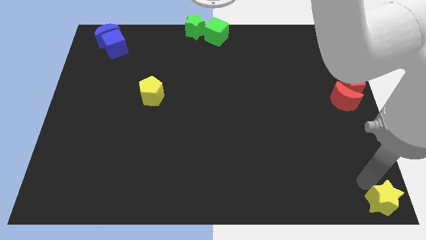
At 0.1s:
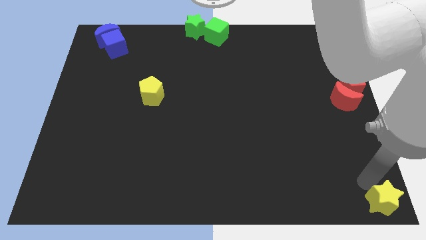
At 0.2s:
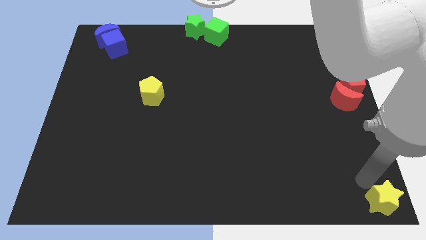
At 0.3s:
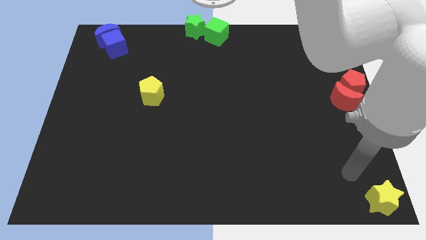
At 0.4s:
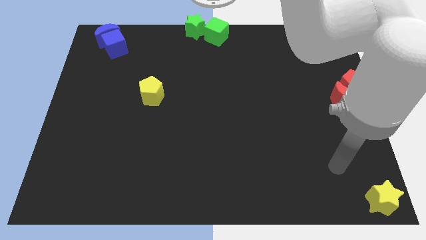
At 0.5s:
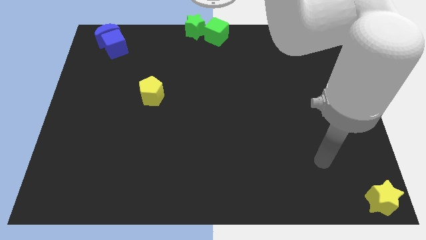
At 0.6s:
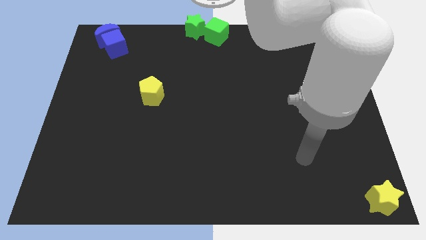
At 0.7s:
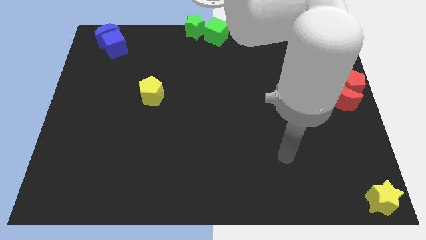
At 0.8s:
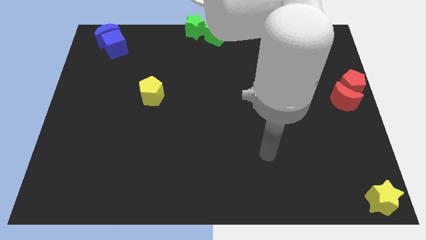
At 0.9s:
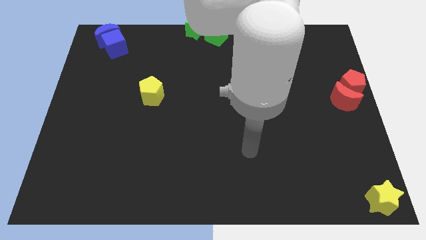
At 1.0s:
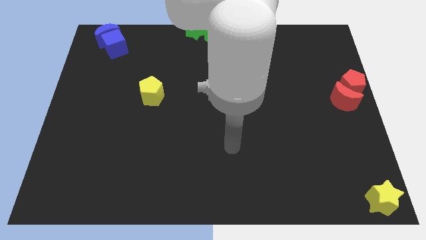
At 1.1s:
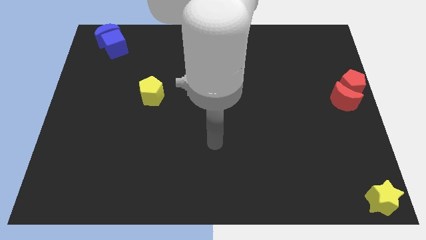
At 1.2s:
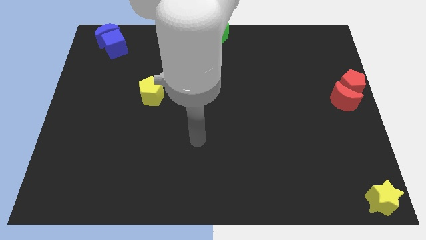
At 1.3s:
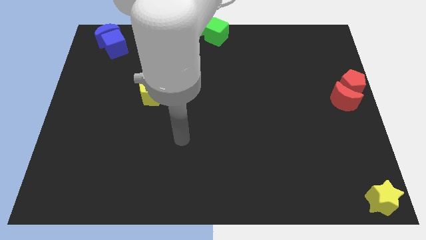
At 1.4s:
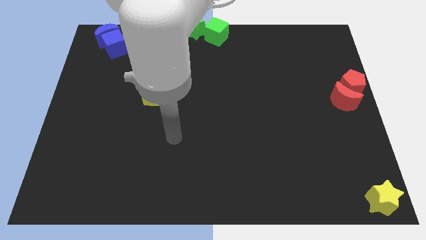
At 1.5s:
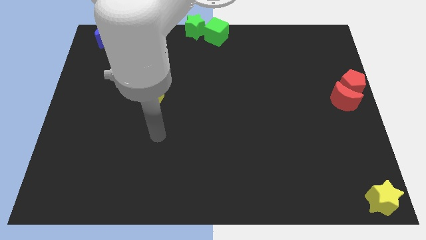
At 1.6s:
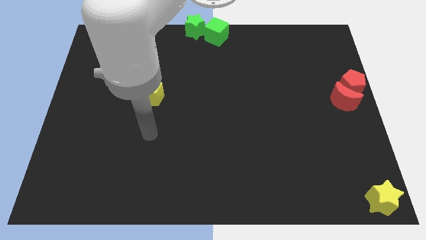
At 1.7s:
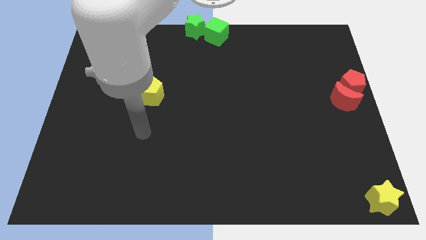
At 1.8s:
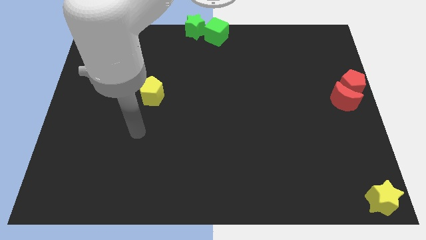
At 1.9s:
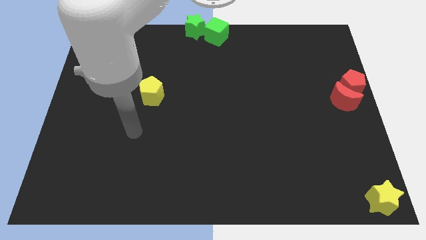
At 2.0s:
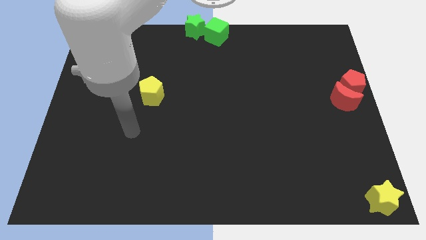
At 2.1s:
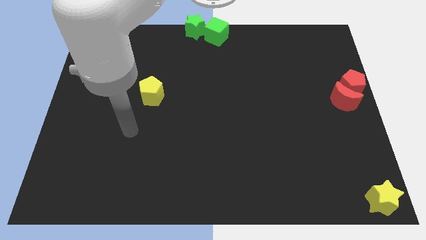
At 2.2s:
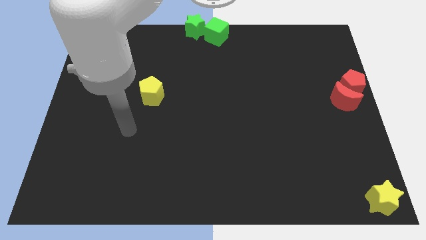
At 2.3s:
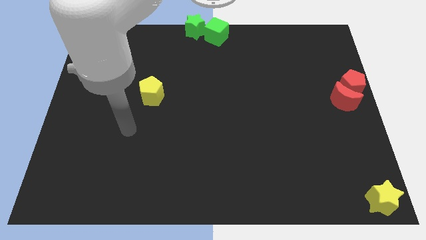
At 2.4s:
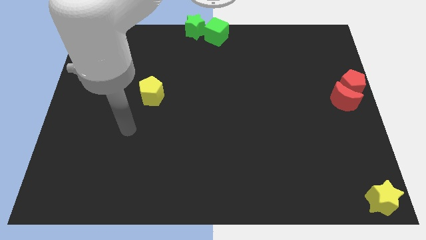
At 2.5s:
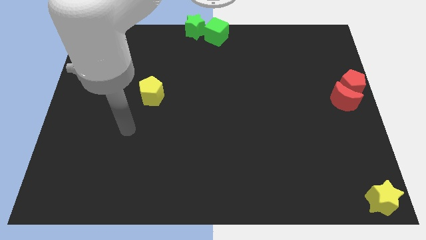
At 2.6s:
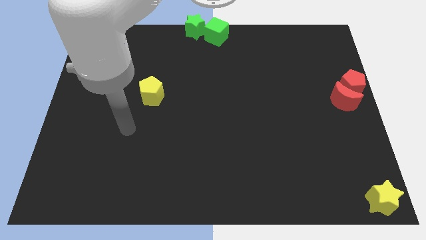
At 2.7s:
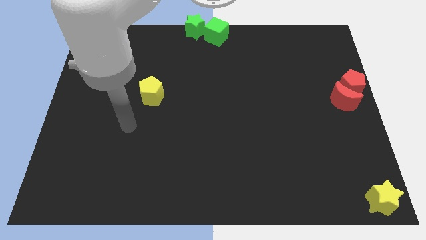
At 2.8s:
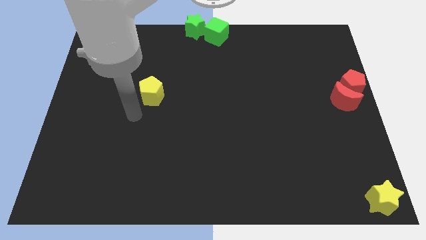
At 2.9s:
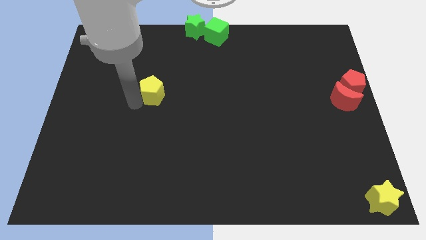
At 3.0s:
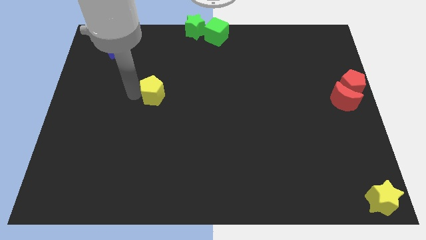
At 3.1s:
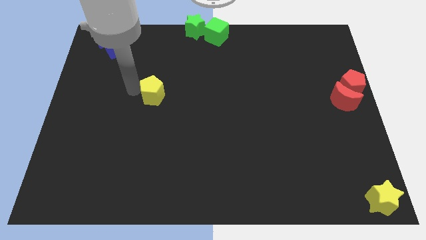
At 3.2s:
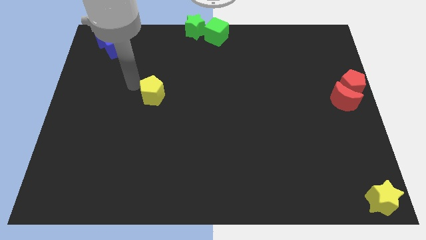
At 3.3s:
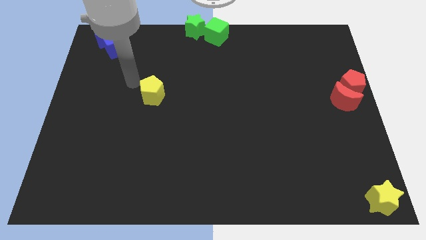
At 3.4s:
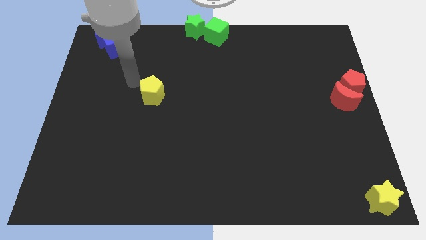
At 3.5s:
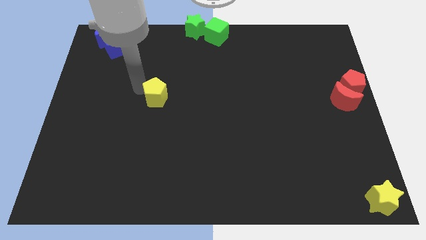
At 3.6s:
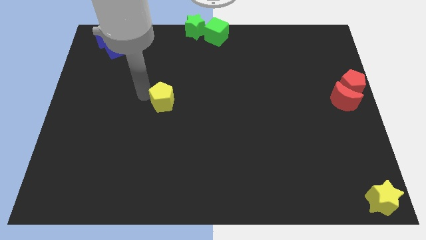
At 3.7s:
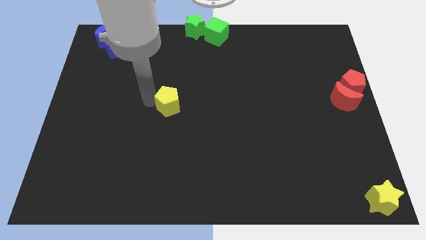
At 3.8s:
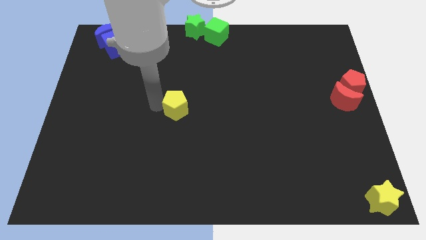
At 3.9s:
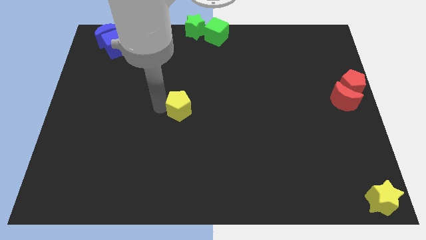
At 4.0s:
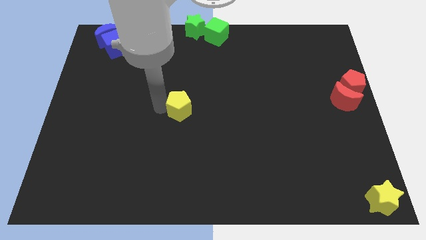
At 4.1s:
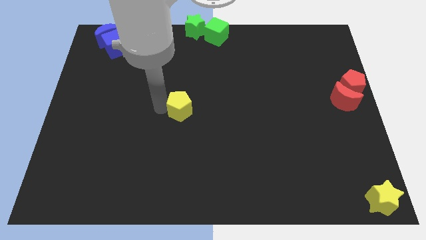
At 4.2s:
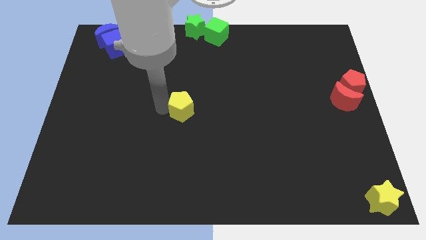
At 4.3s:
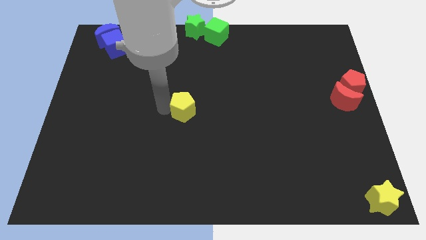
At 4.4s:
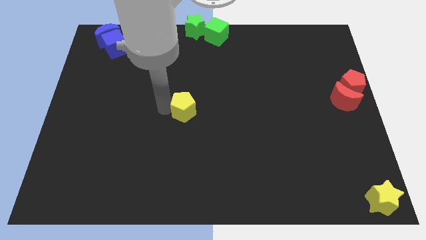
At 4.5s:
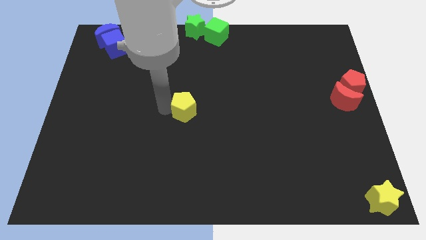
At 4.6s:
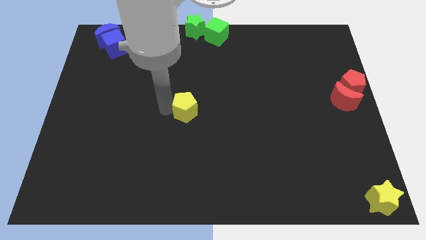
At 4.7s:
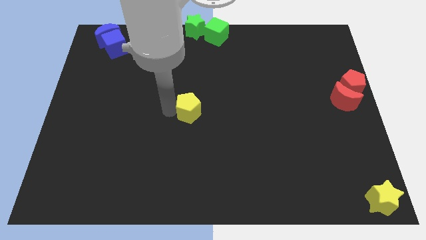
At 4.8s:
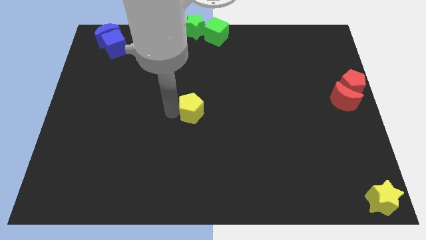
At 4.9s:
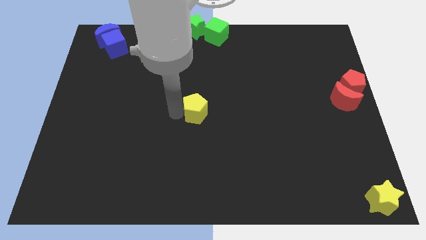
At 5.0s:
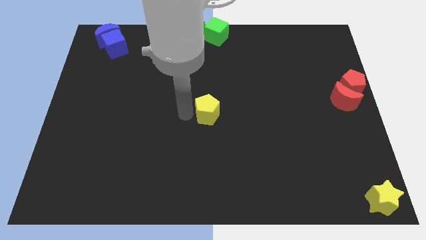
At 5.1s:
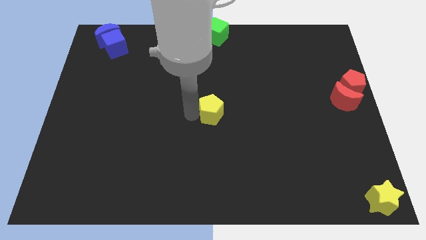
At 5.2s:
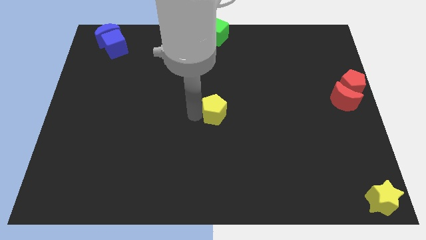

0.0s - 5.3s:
move the yellow pentagon to the center of the board

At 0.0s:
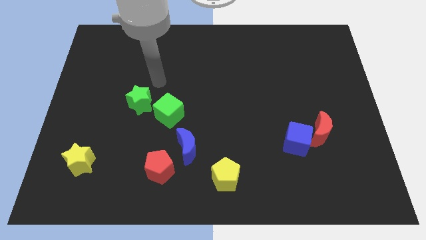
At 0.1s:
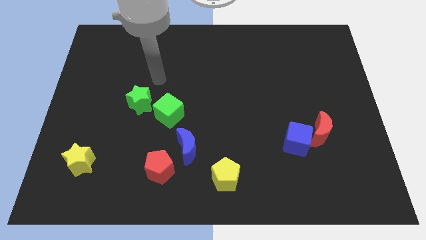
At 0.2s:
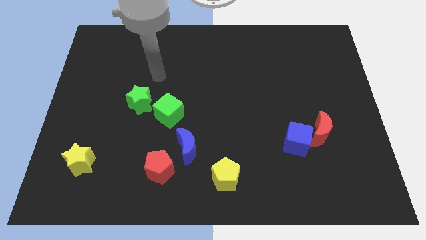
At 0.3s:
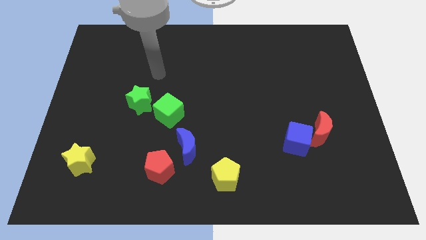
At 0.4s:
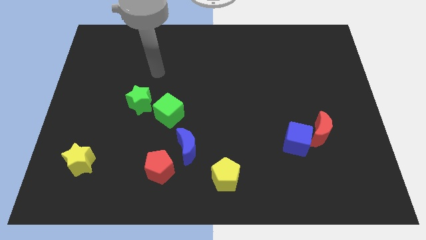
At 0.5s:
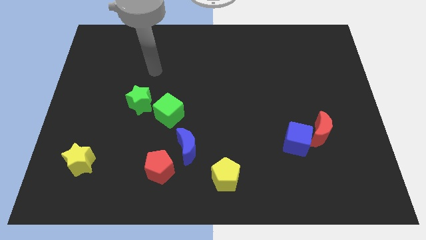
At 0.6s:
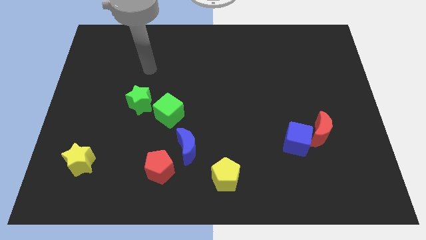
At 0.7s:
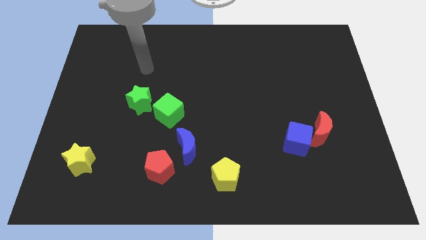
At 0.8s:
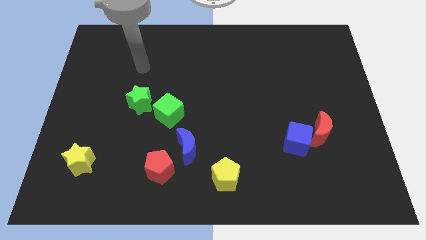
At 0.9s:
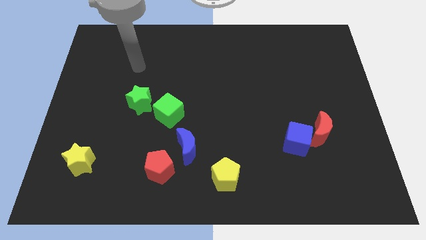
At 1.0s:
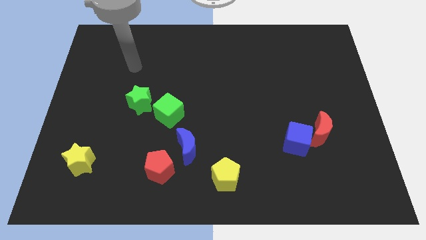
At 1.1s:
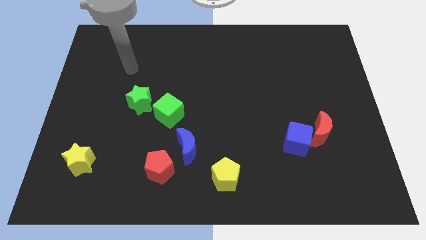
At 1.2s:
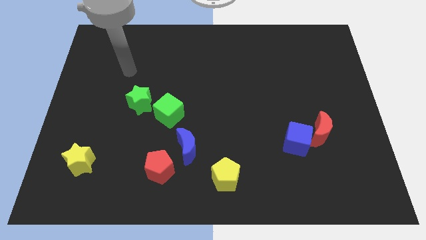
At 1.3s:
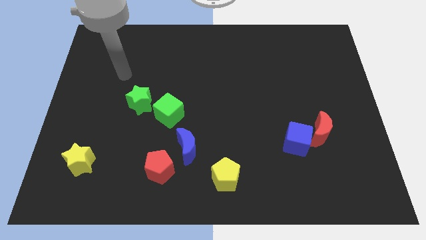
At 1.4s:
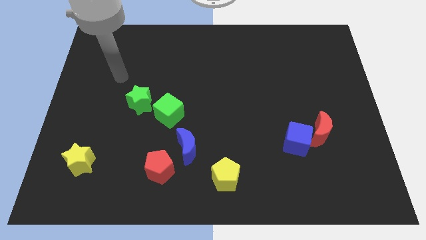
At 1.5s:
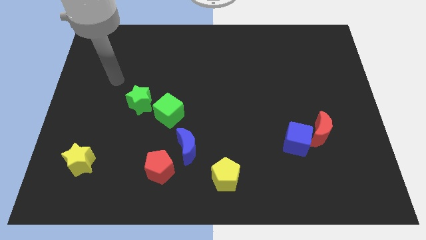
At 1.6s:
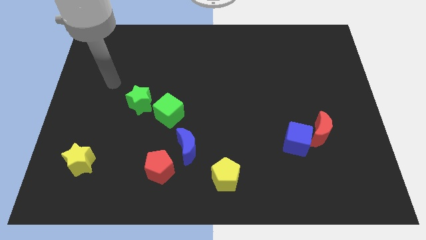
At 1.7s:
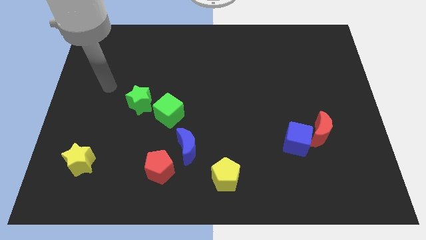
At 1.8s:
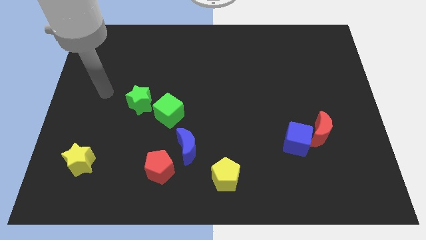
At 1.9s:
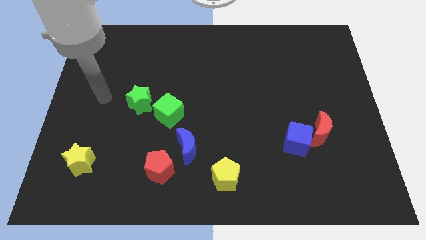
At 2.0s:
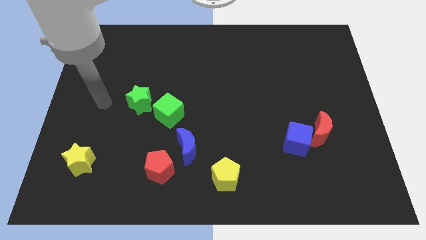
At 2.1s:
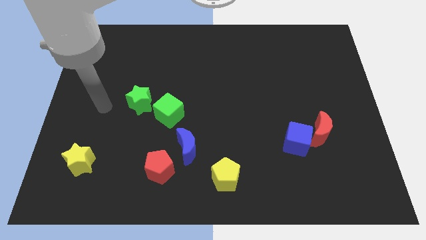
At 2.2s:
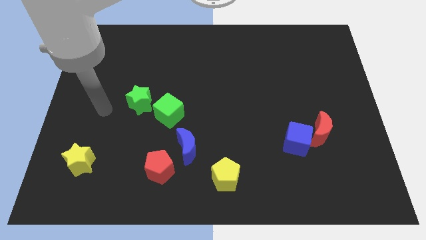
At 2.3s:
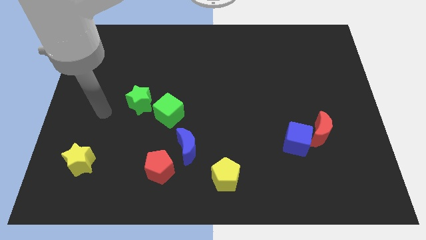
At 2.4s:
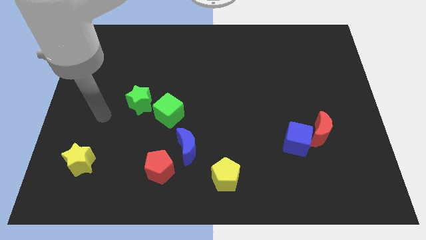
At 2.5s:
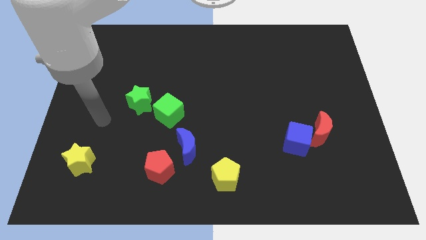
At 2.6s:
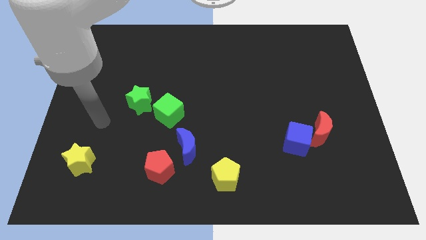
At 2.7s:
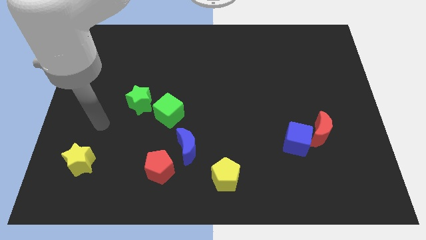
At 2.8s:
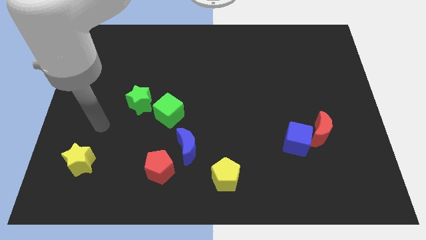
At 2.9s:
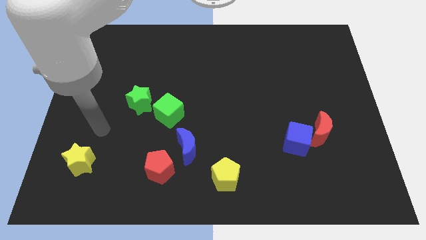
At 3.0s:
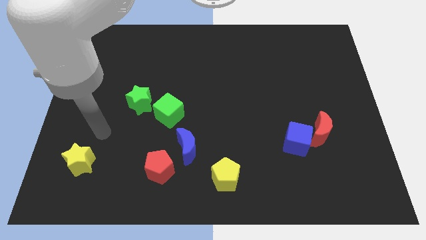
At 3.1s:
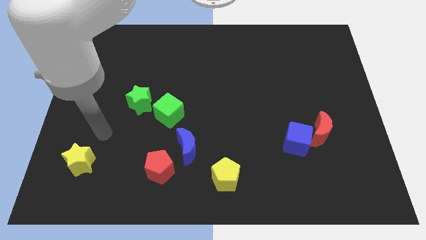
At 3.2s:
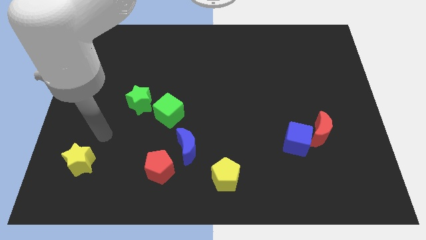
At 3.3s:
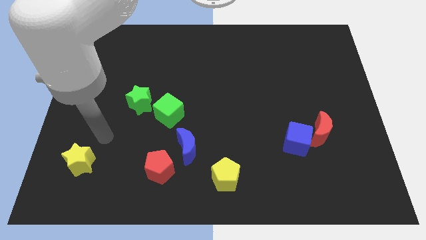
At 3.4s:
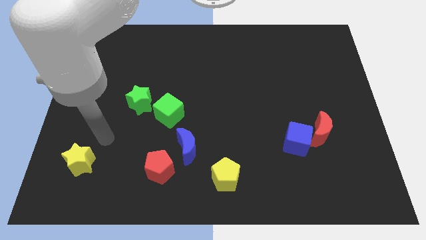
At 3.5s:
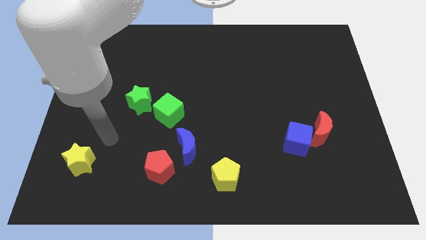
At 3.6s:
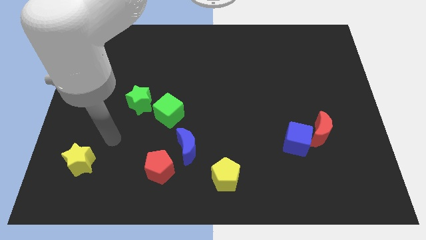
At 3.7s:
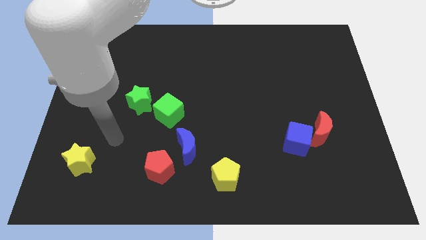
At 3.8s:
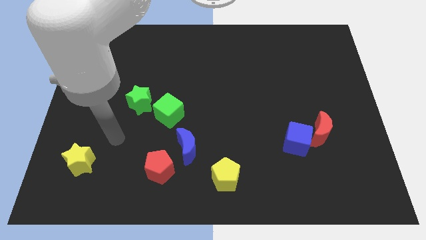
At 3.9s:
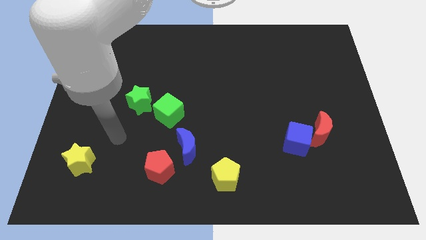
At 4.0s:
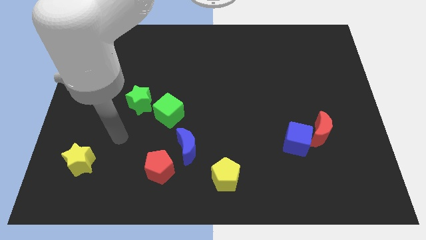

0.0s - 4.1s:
move your arm close to the green star
